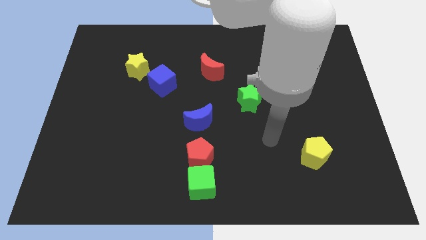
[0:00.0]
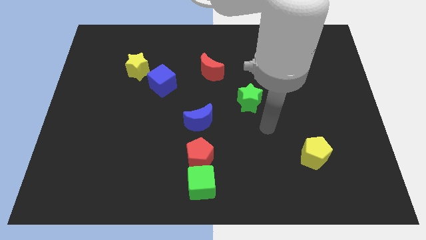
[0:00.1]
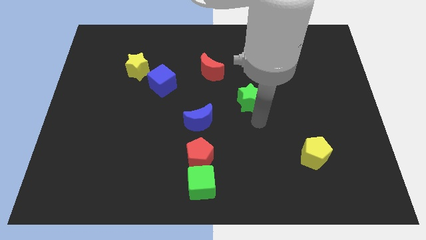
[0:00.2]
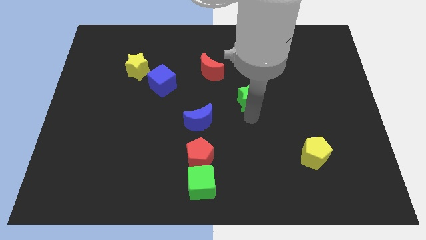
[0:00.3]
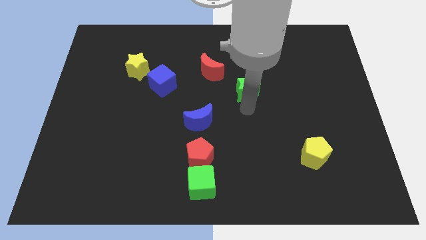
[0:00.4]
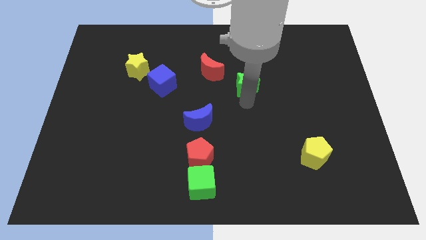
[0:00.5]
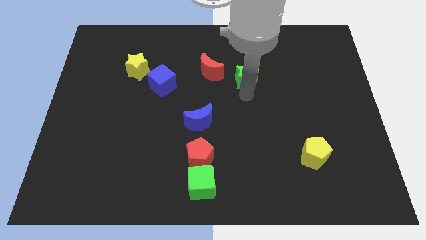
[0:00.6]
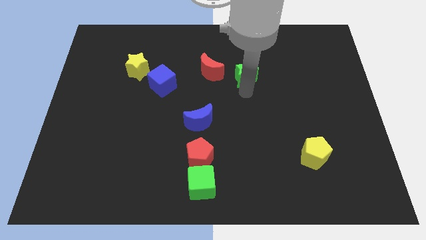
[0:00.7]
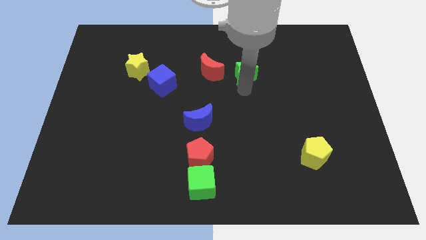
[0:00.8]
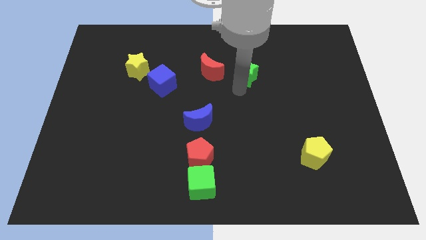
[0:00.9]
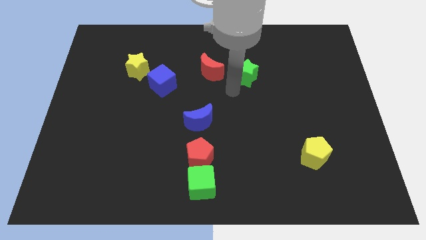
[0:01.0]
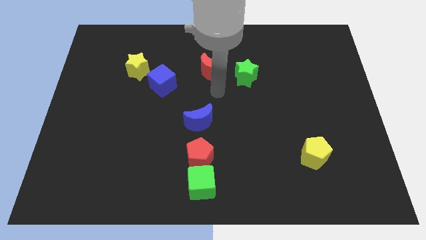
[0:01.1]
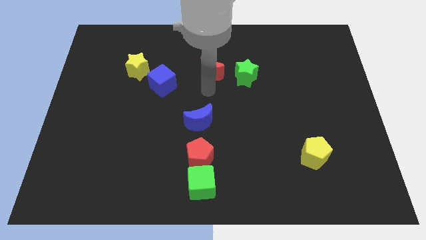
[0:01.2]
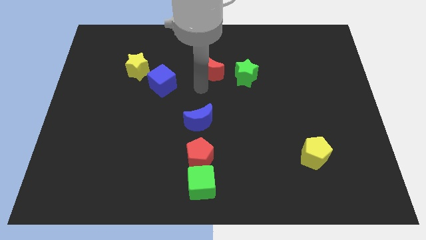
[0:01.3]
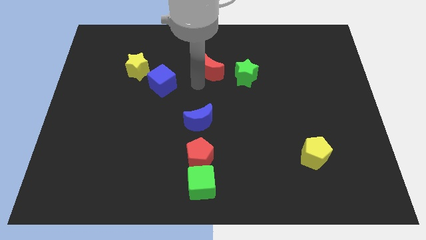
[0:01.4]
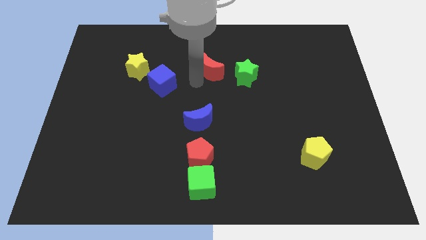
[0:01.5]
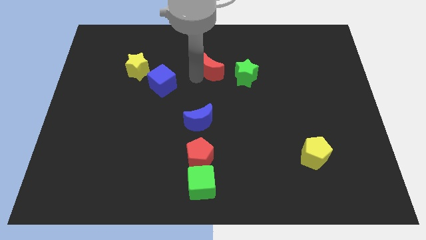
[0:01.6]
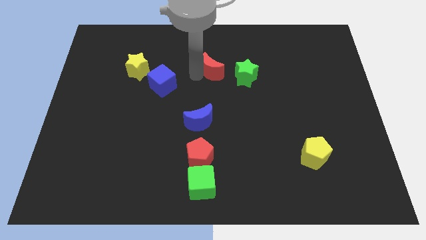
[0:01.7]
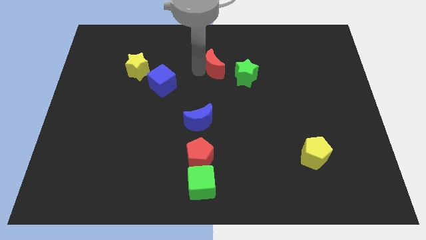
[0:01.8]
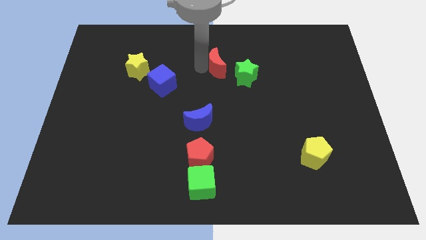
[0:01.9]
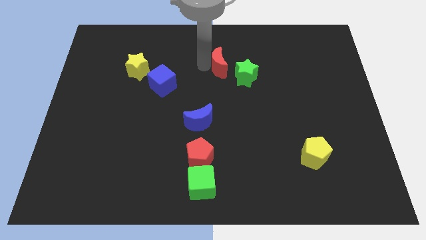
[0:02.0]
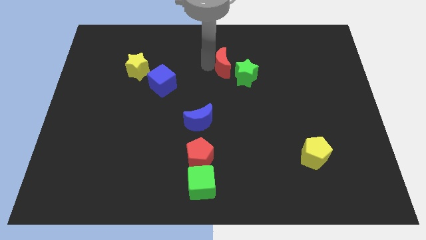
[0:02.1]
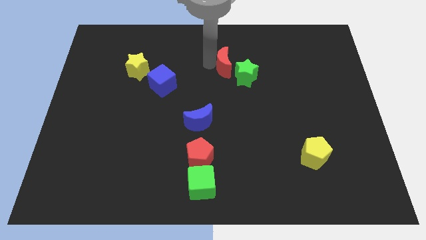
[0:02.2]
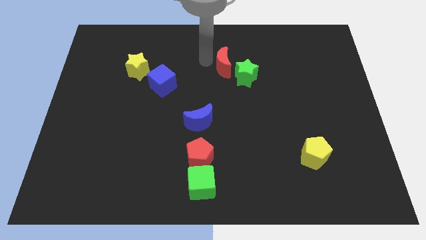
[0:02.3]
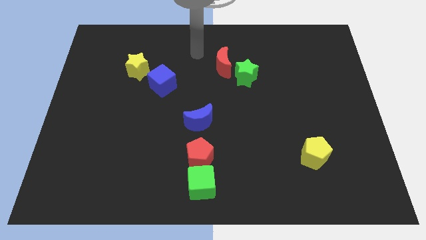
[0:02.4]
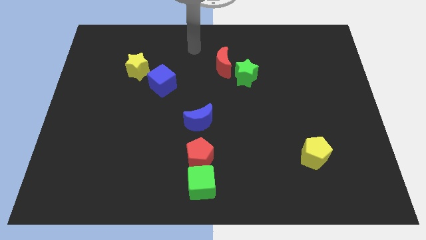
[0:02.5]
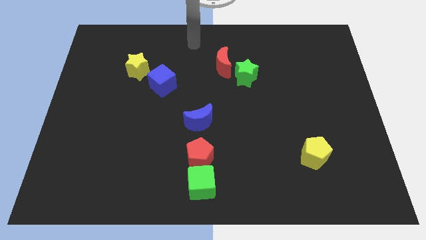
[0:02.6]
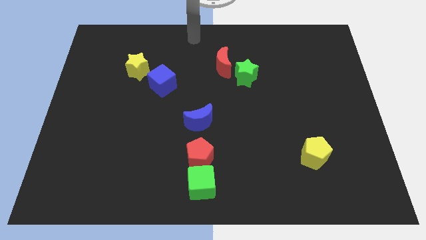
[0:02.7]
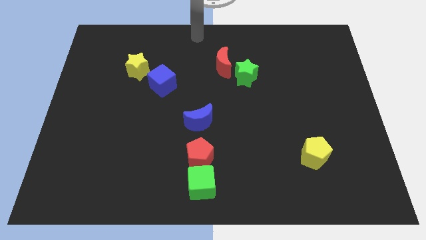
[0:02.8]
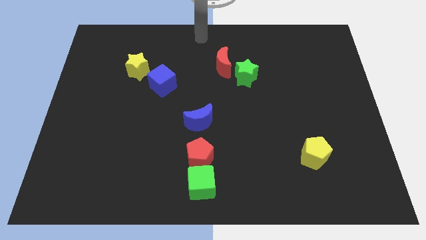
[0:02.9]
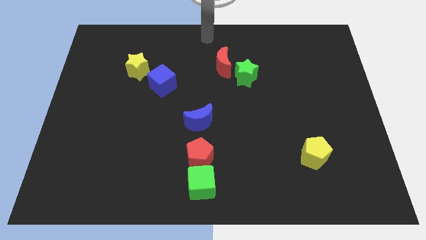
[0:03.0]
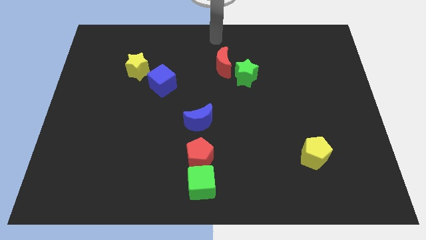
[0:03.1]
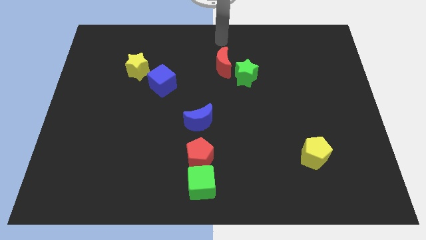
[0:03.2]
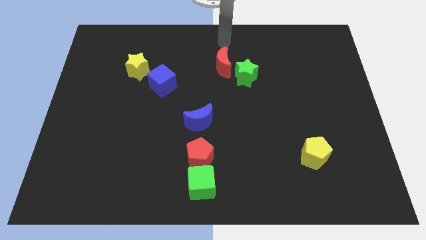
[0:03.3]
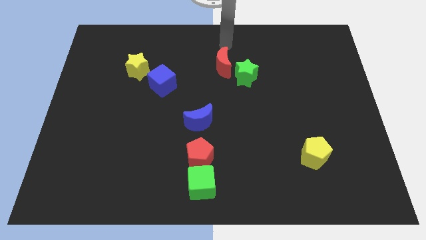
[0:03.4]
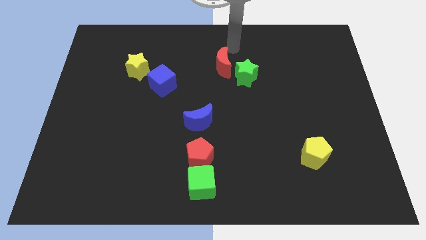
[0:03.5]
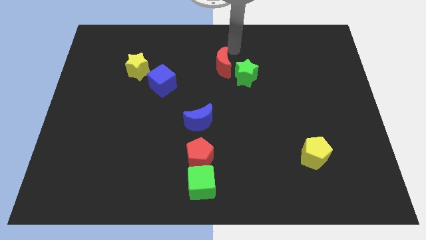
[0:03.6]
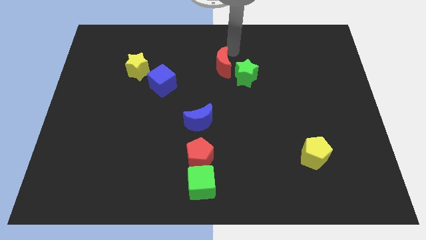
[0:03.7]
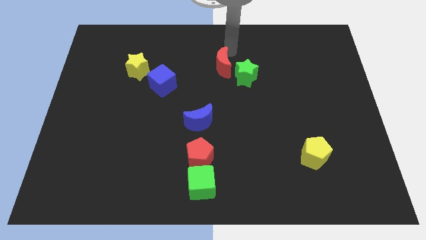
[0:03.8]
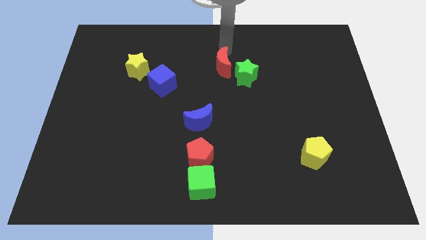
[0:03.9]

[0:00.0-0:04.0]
push the red crescent towards the green star

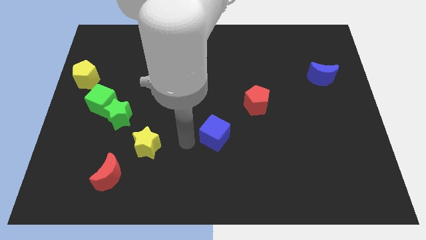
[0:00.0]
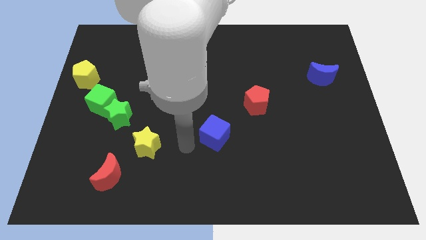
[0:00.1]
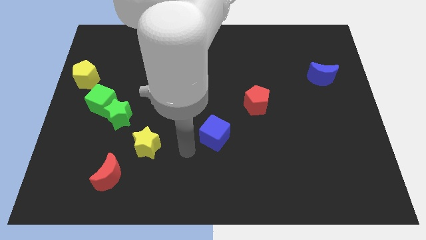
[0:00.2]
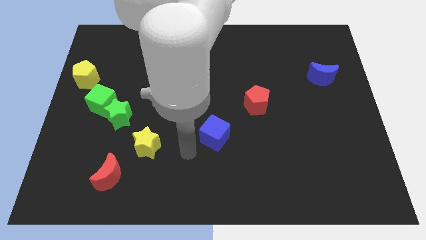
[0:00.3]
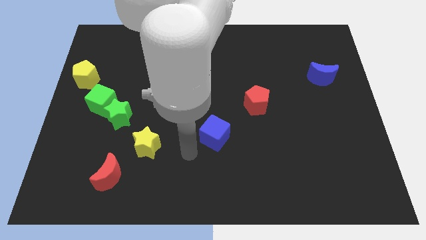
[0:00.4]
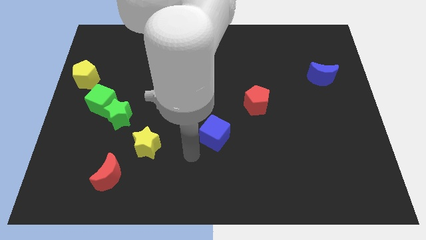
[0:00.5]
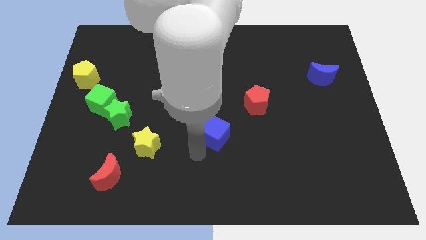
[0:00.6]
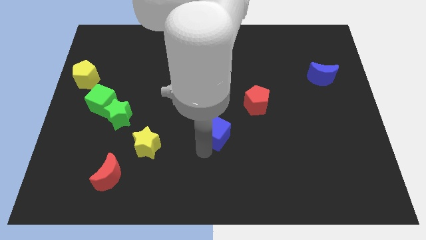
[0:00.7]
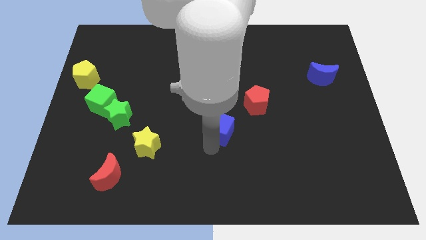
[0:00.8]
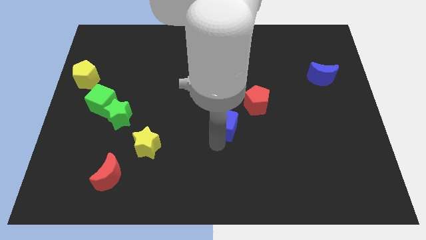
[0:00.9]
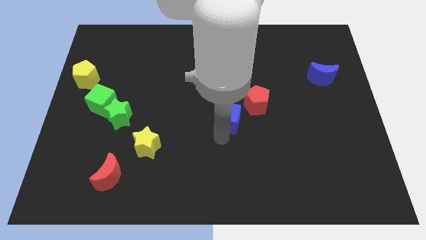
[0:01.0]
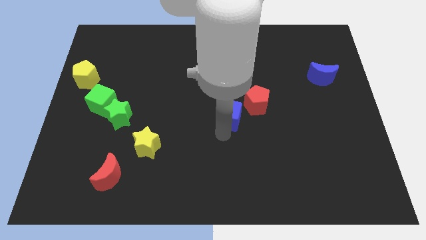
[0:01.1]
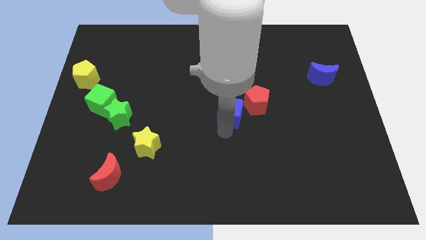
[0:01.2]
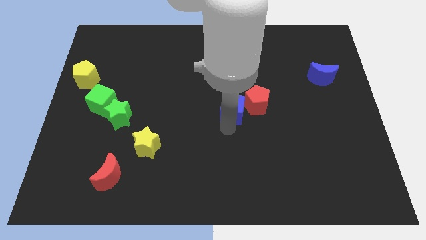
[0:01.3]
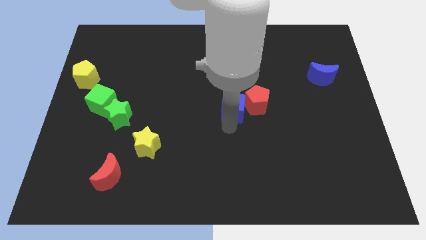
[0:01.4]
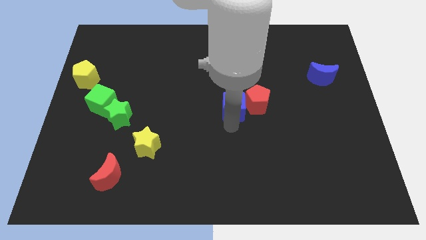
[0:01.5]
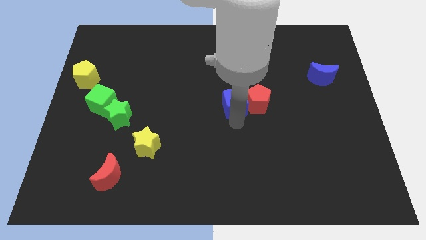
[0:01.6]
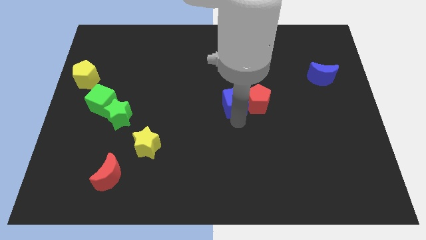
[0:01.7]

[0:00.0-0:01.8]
push the blue cube to the left of the red pentagon

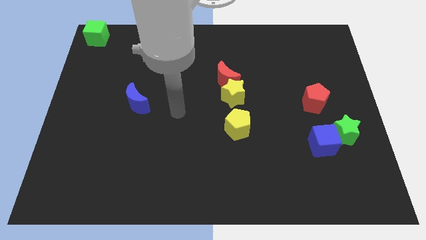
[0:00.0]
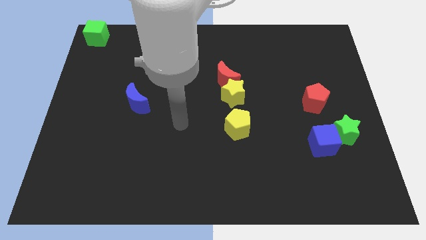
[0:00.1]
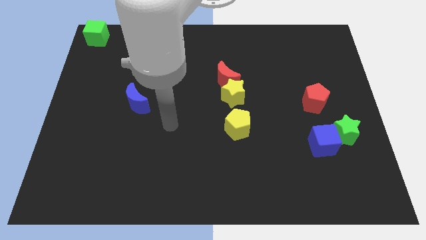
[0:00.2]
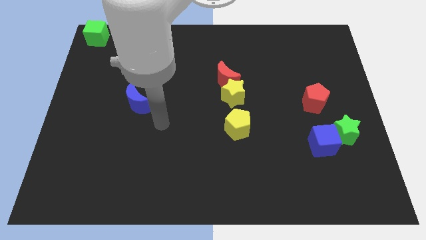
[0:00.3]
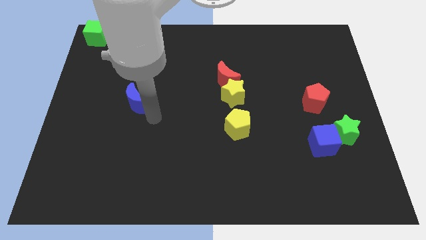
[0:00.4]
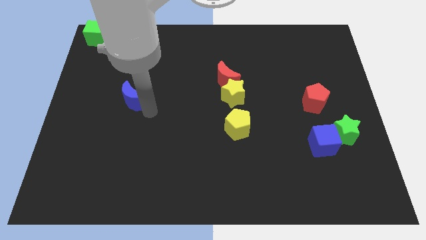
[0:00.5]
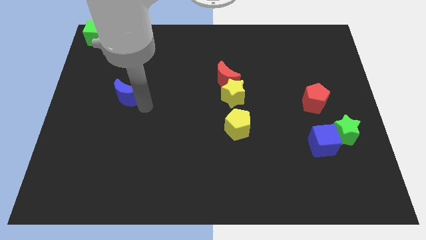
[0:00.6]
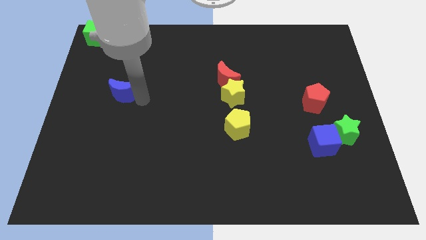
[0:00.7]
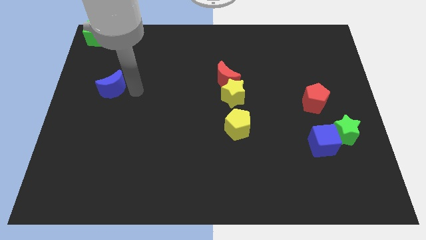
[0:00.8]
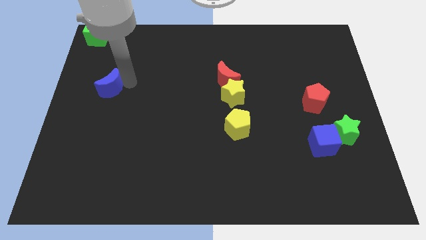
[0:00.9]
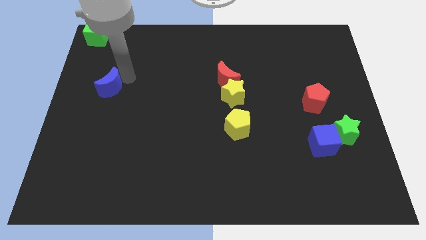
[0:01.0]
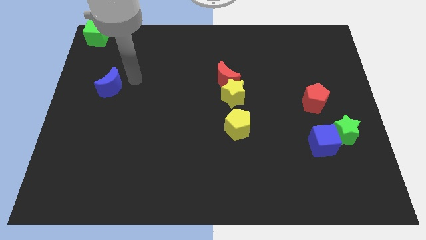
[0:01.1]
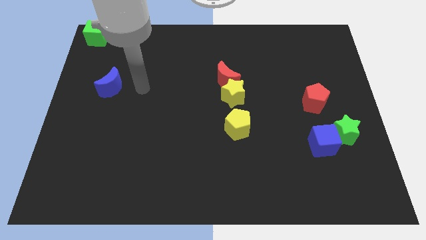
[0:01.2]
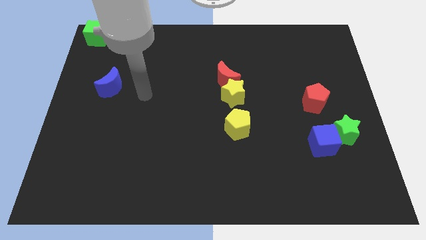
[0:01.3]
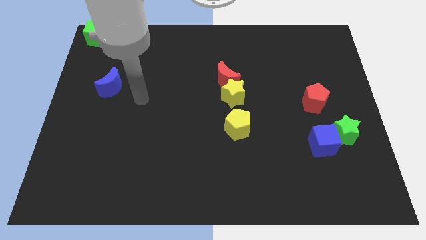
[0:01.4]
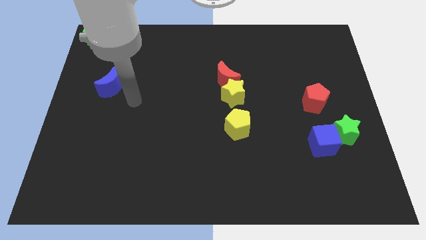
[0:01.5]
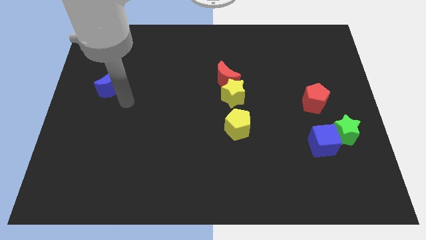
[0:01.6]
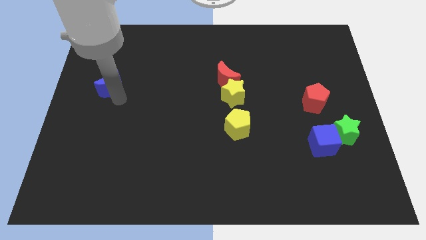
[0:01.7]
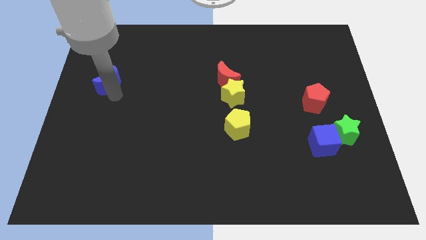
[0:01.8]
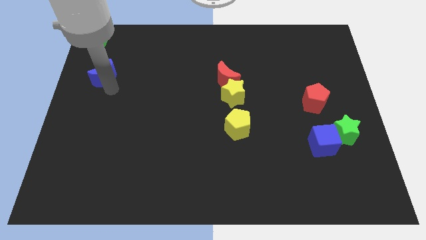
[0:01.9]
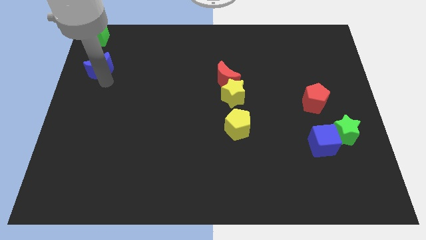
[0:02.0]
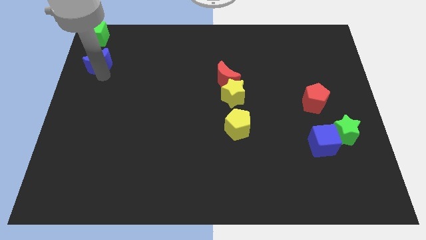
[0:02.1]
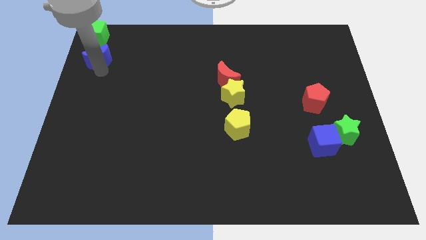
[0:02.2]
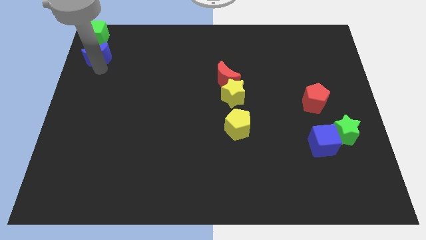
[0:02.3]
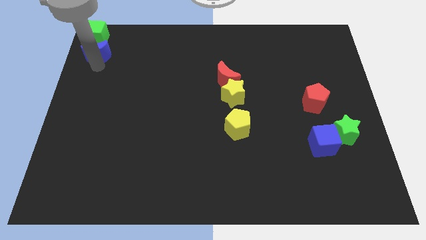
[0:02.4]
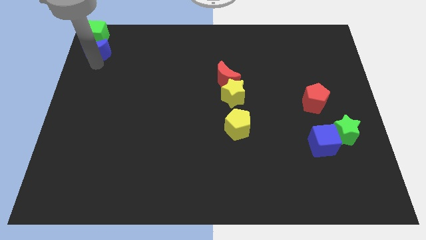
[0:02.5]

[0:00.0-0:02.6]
place the blue crescent under the green cube

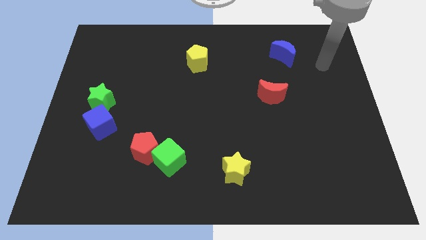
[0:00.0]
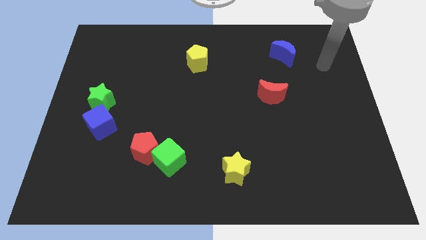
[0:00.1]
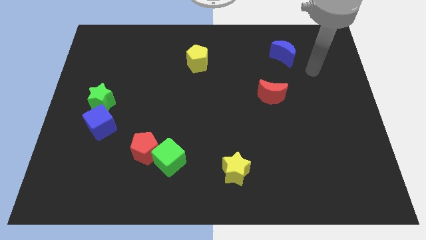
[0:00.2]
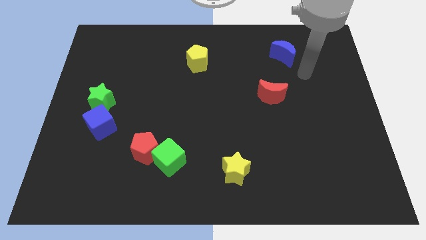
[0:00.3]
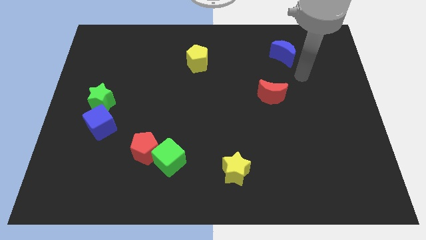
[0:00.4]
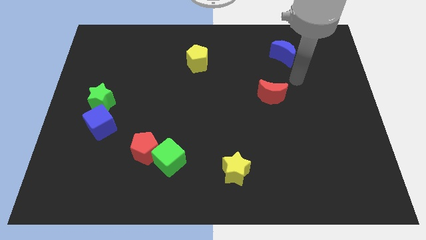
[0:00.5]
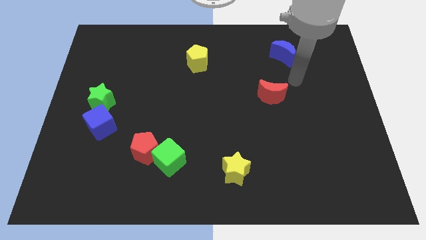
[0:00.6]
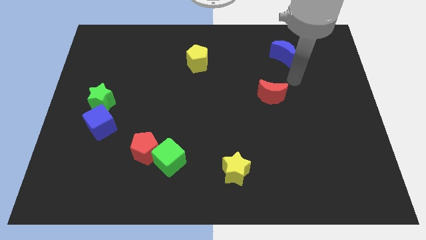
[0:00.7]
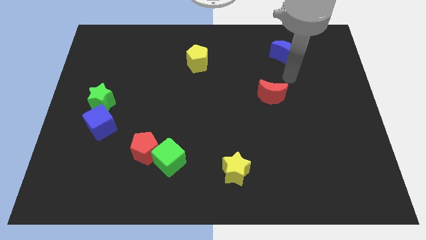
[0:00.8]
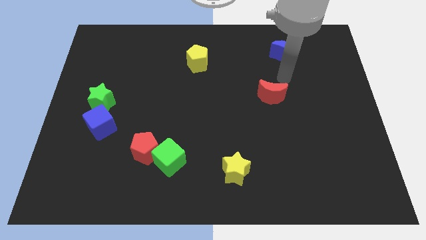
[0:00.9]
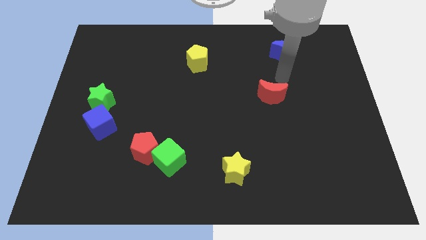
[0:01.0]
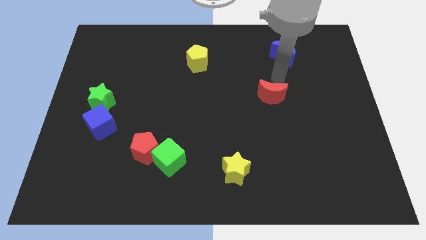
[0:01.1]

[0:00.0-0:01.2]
move the arm on the top of the red moon
